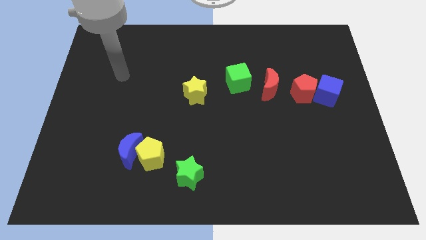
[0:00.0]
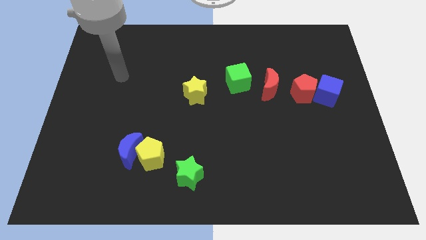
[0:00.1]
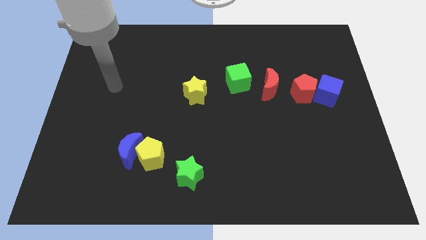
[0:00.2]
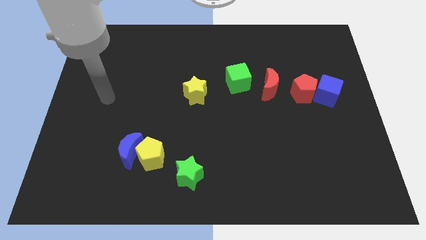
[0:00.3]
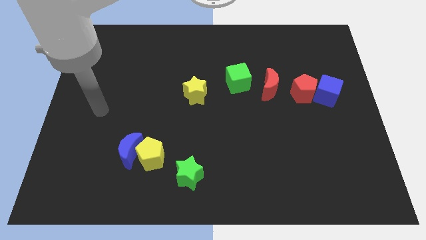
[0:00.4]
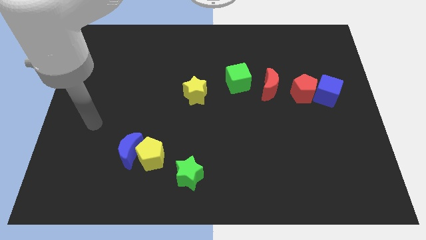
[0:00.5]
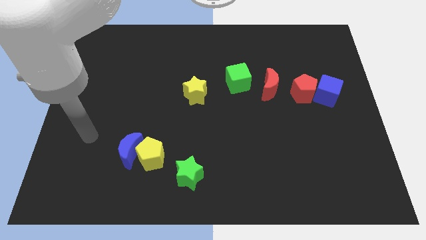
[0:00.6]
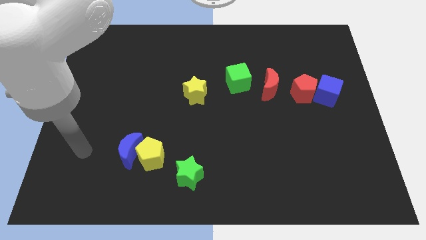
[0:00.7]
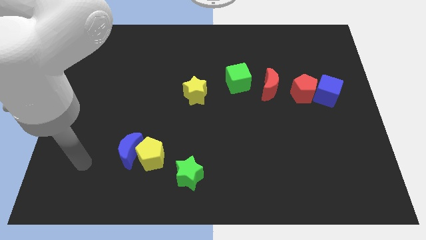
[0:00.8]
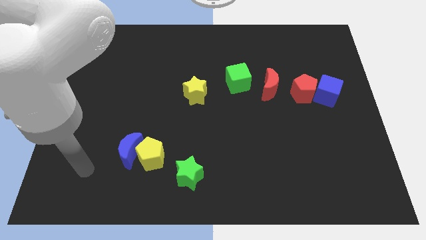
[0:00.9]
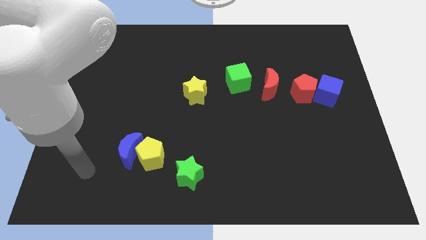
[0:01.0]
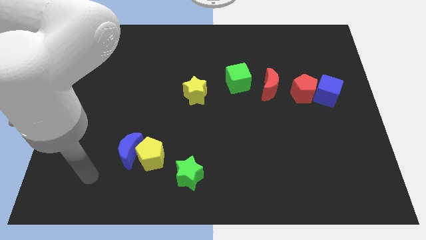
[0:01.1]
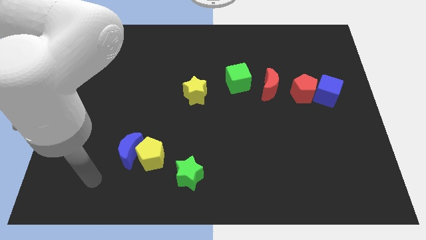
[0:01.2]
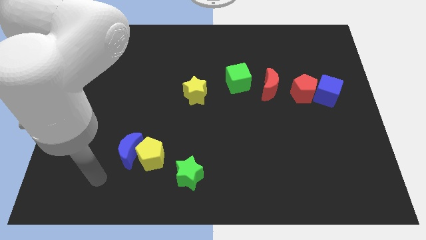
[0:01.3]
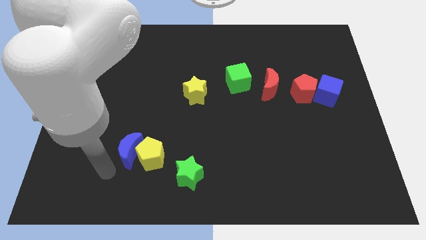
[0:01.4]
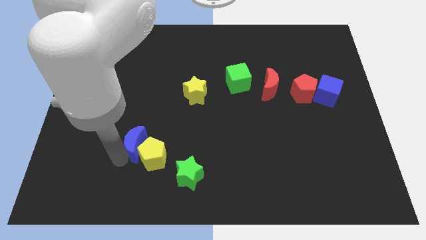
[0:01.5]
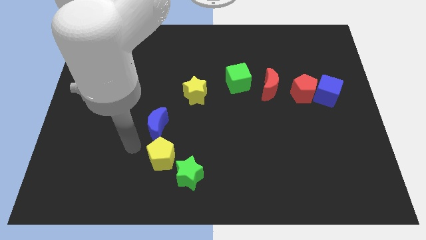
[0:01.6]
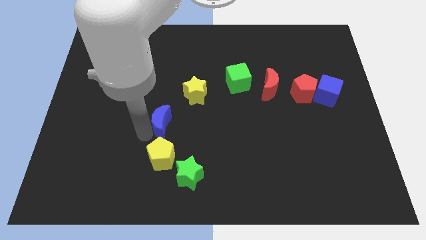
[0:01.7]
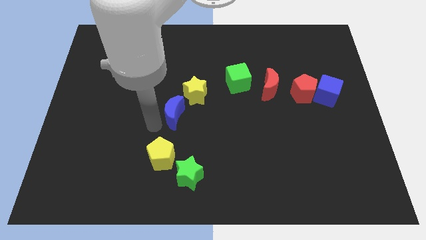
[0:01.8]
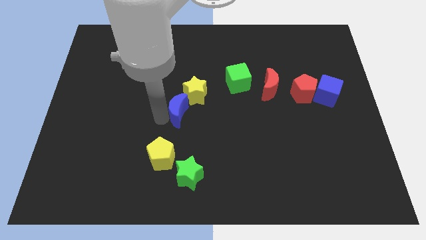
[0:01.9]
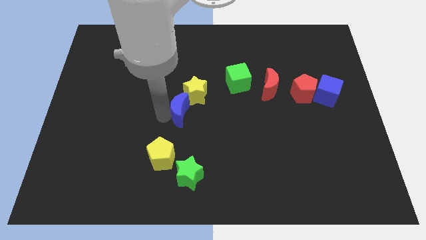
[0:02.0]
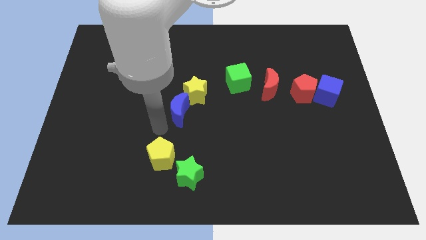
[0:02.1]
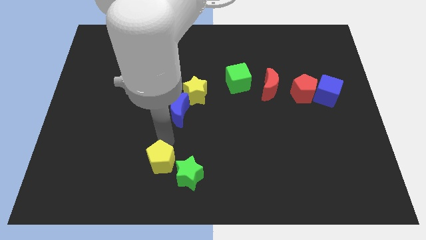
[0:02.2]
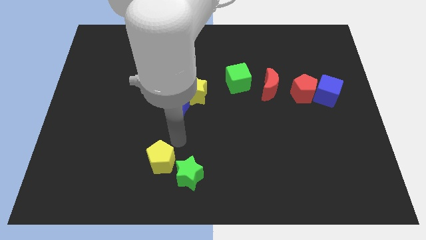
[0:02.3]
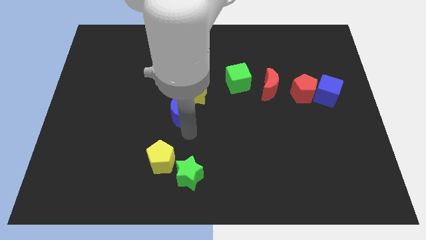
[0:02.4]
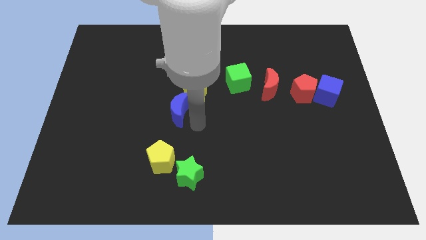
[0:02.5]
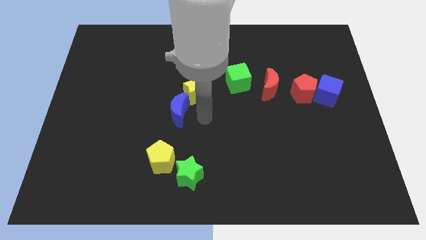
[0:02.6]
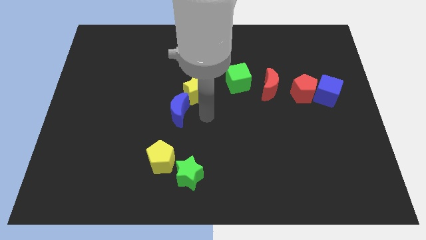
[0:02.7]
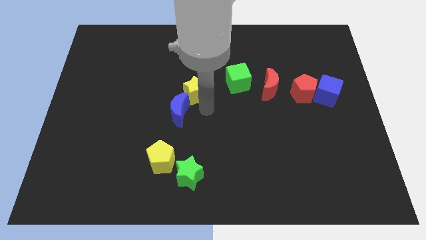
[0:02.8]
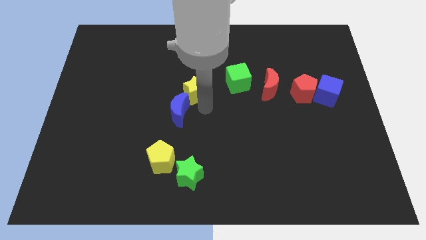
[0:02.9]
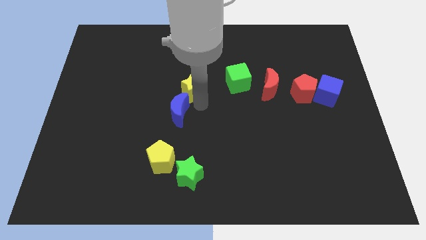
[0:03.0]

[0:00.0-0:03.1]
place the blue crescent at the bottom side of the yellow star

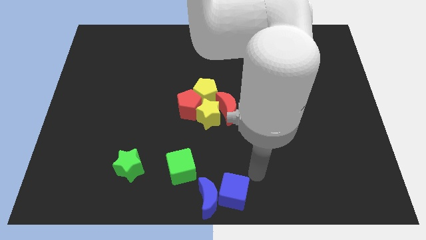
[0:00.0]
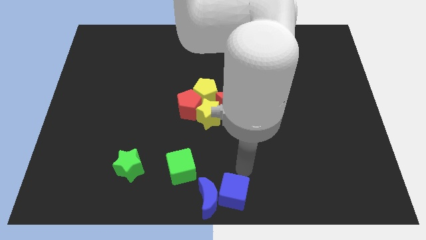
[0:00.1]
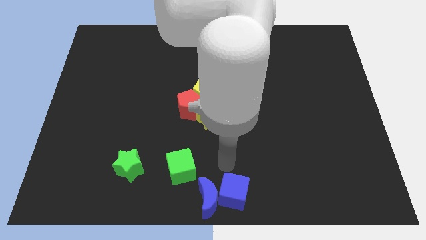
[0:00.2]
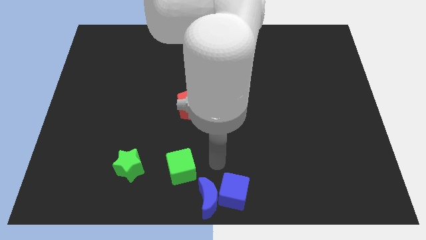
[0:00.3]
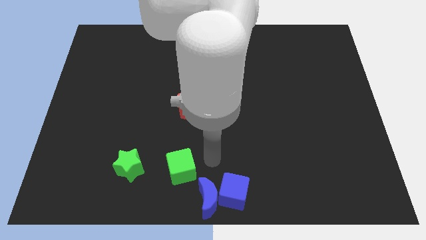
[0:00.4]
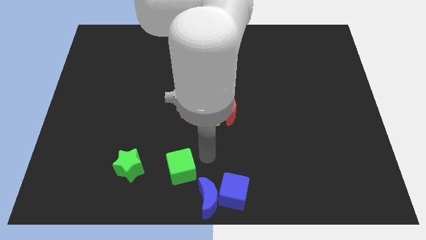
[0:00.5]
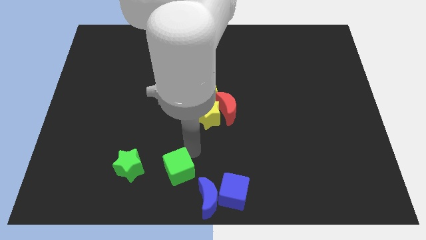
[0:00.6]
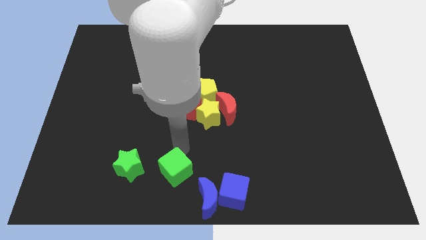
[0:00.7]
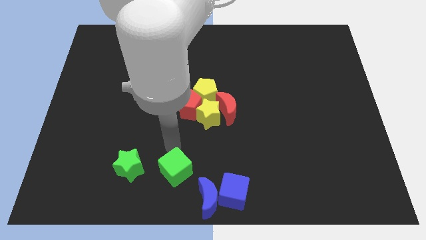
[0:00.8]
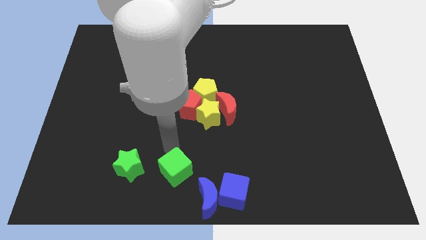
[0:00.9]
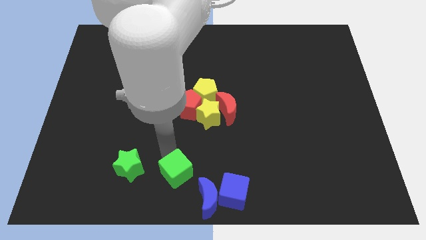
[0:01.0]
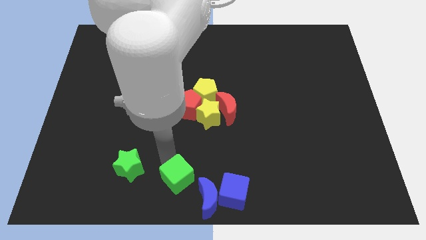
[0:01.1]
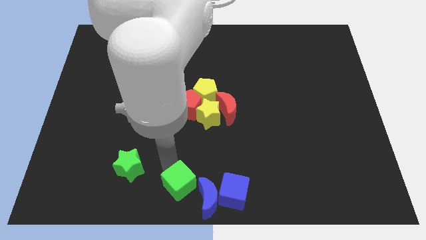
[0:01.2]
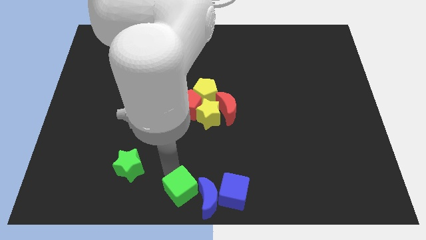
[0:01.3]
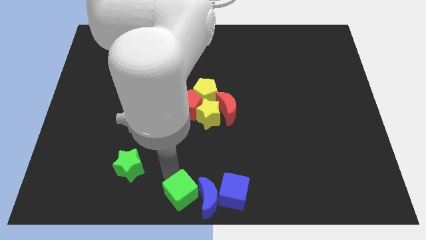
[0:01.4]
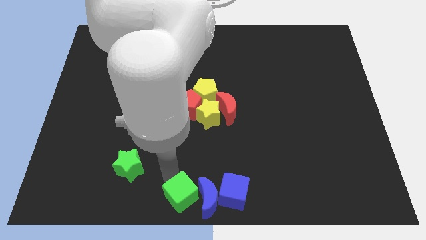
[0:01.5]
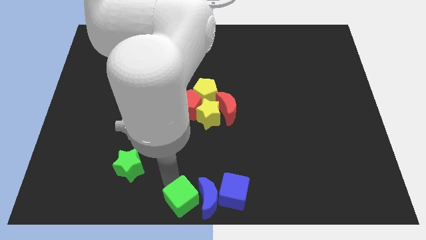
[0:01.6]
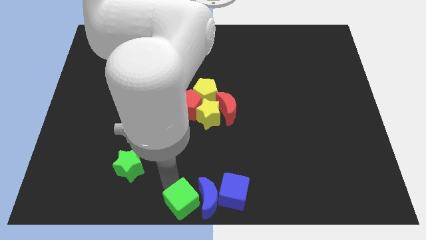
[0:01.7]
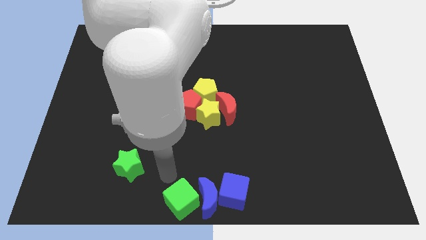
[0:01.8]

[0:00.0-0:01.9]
move green cube left beside the blue moon

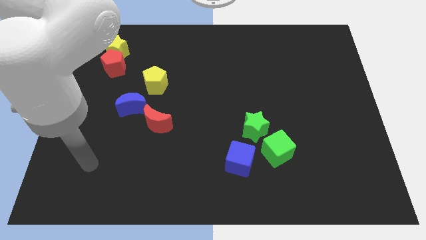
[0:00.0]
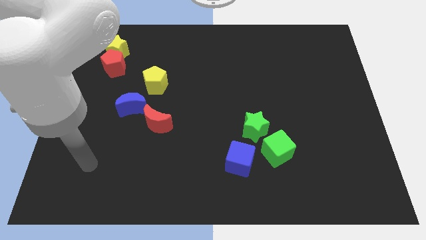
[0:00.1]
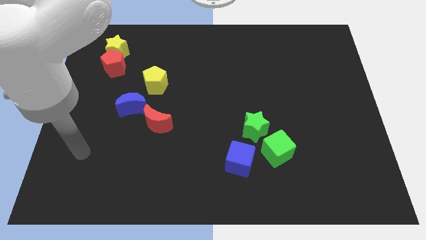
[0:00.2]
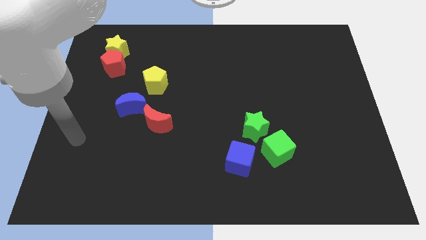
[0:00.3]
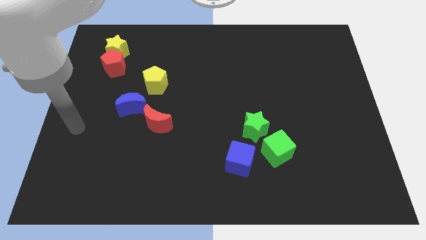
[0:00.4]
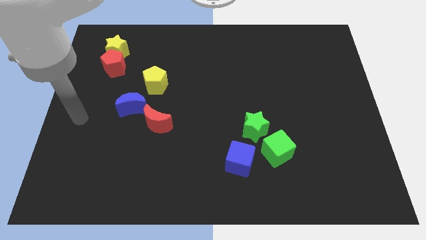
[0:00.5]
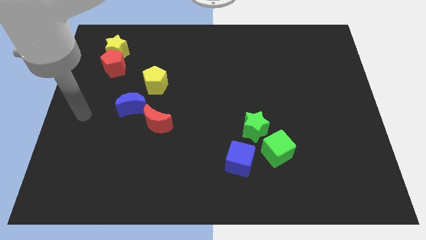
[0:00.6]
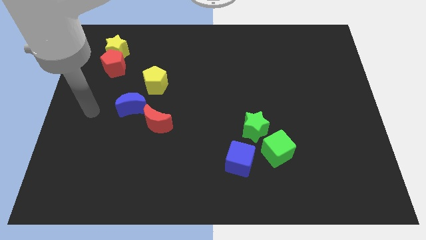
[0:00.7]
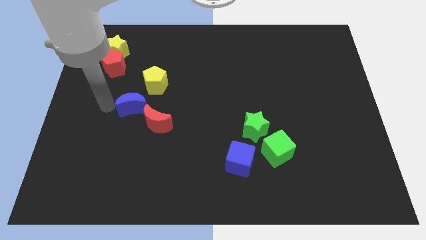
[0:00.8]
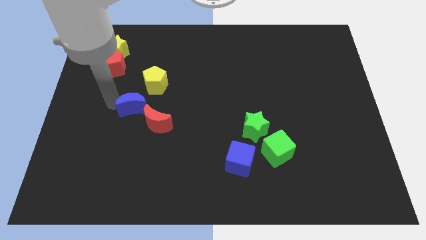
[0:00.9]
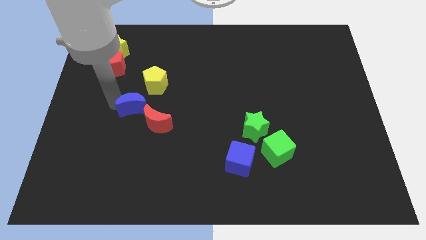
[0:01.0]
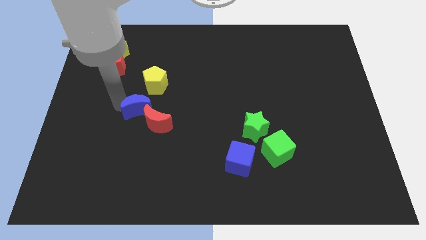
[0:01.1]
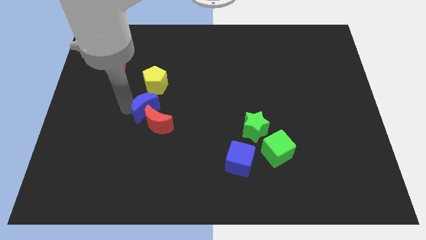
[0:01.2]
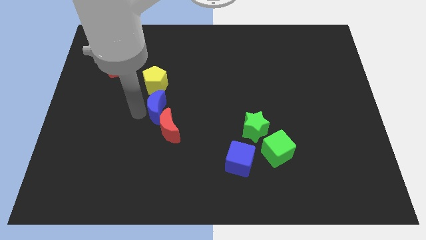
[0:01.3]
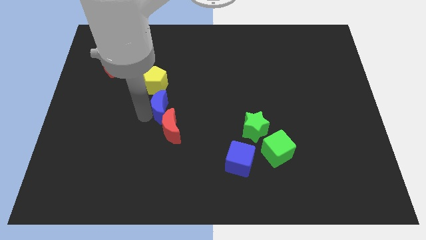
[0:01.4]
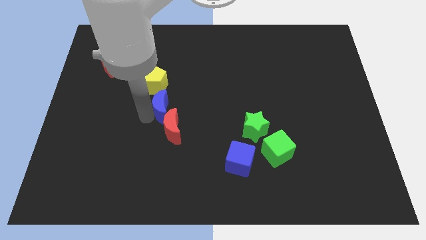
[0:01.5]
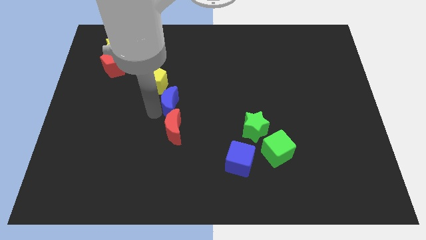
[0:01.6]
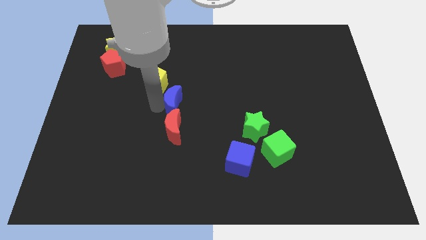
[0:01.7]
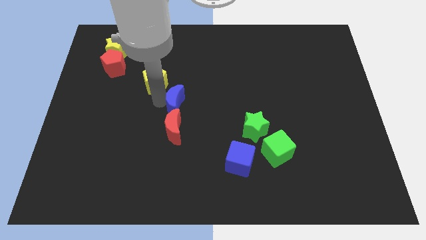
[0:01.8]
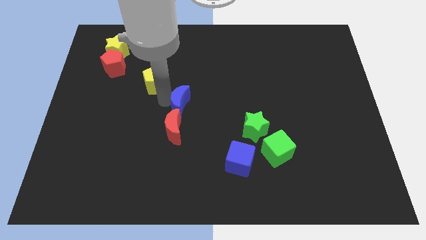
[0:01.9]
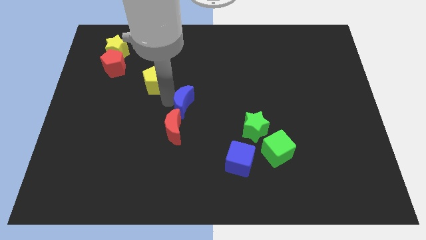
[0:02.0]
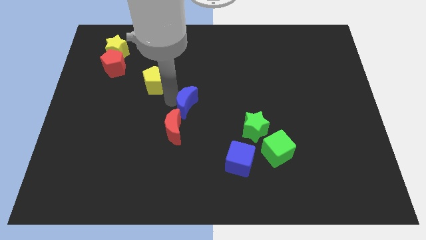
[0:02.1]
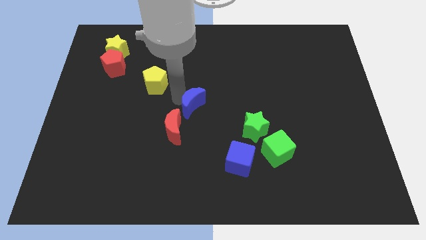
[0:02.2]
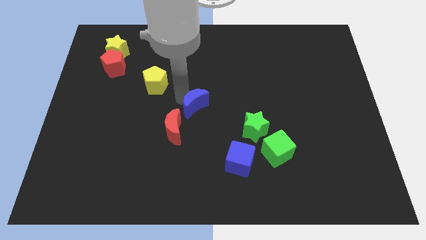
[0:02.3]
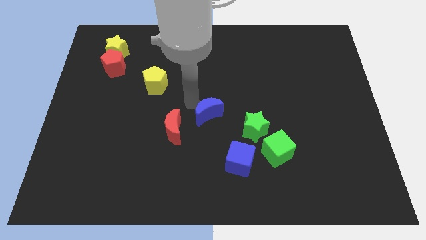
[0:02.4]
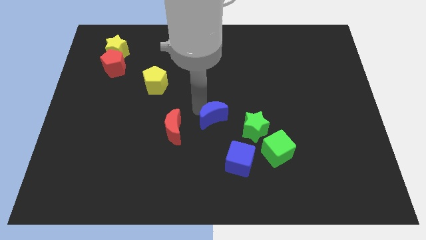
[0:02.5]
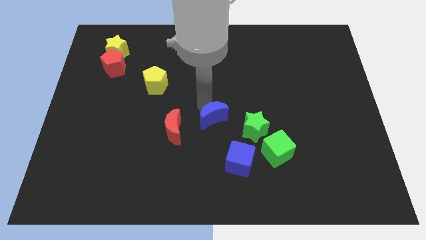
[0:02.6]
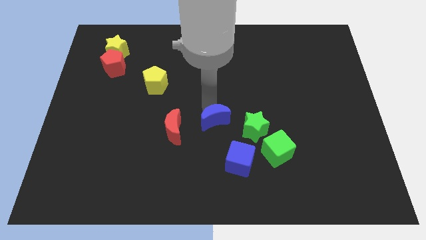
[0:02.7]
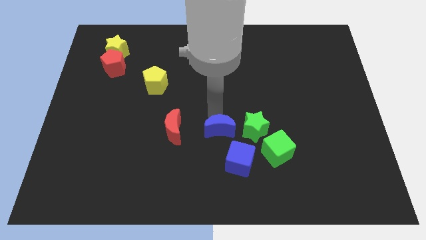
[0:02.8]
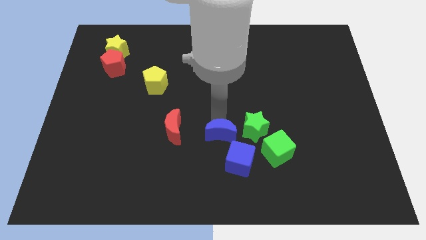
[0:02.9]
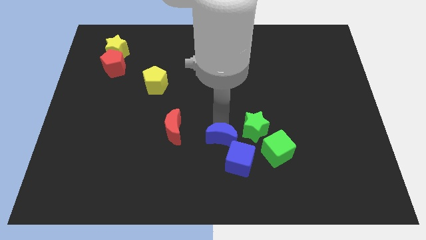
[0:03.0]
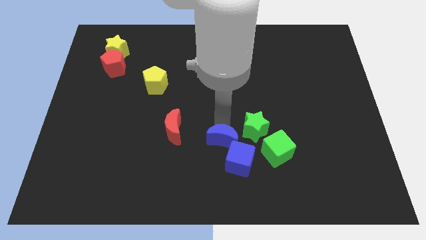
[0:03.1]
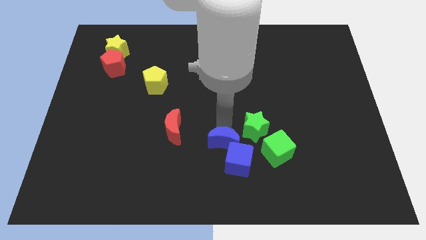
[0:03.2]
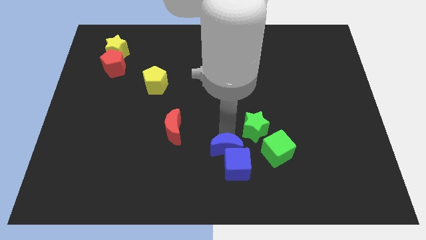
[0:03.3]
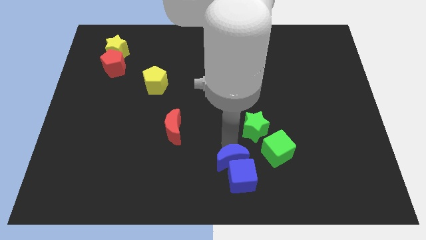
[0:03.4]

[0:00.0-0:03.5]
push the blue moon into the blue cube

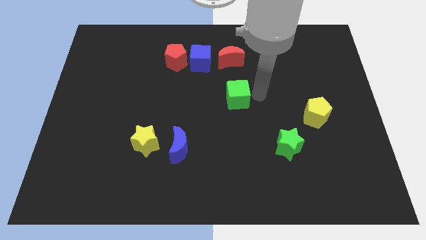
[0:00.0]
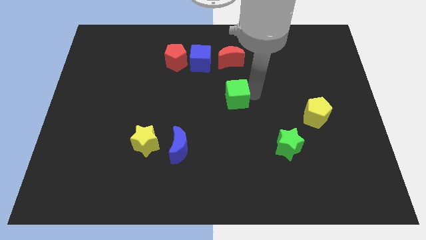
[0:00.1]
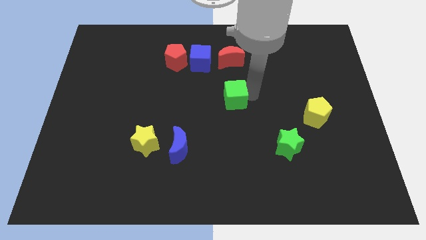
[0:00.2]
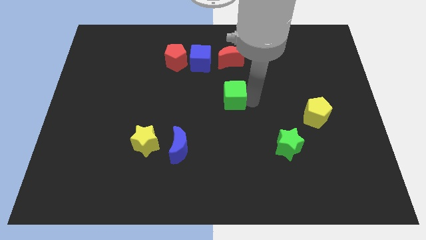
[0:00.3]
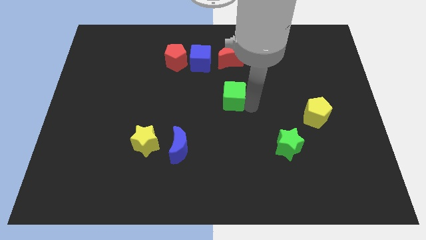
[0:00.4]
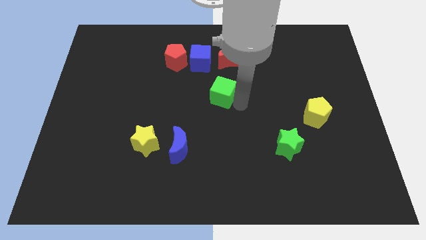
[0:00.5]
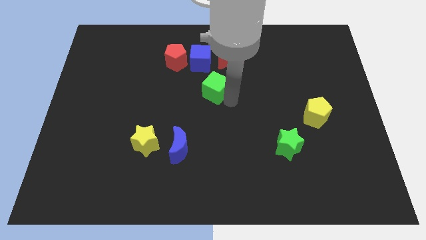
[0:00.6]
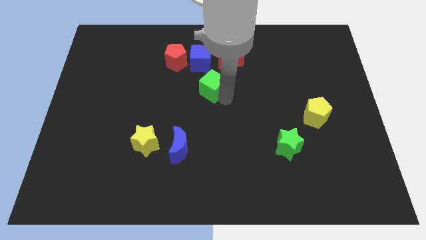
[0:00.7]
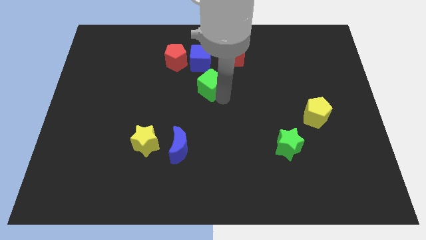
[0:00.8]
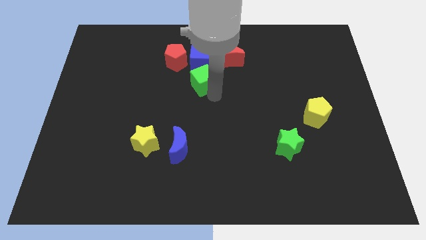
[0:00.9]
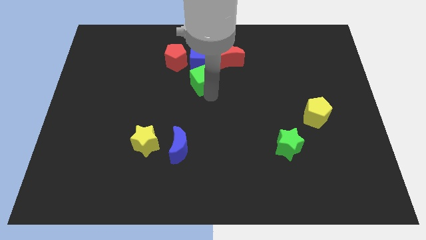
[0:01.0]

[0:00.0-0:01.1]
slide the green cube close to the bottom side of the blue cube
